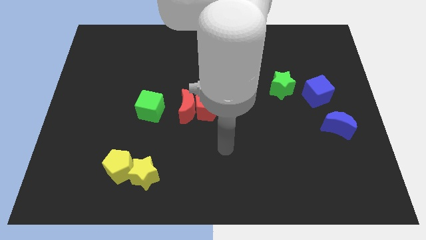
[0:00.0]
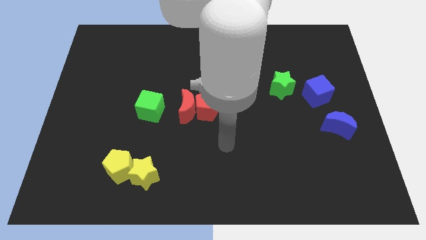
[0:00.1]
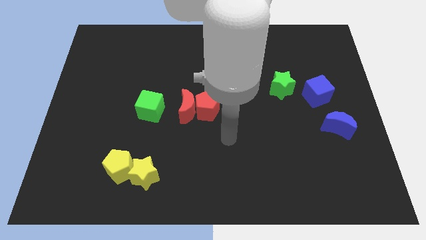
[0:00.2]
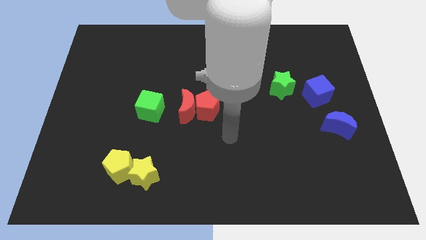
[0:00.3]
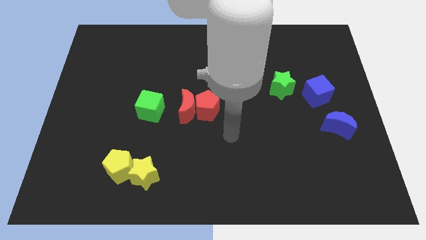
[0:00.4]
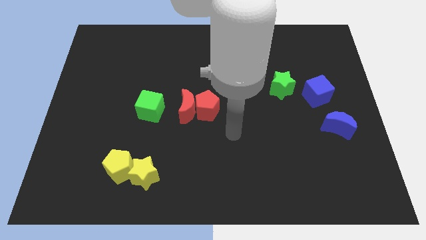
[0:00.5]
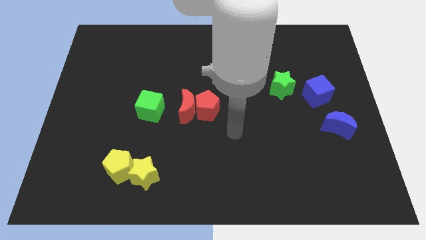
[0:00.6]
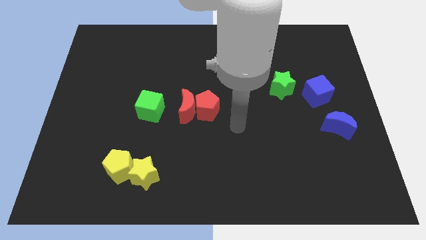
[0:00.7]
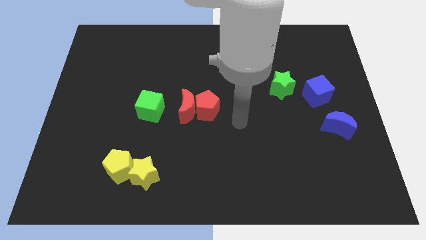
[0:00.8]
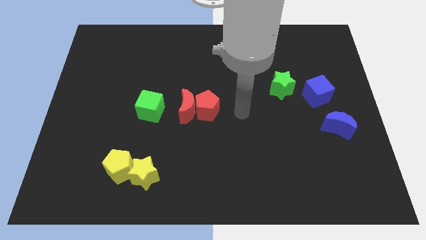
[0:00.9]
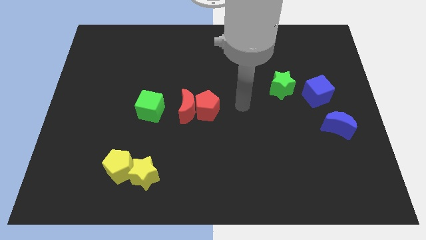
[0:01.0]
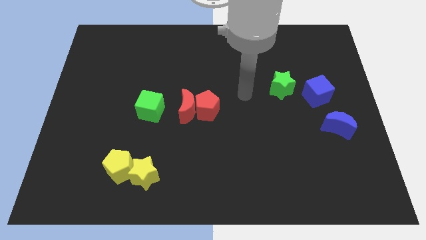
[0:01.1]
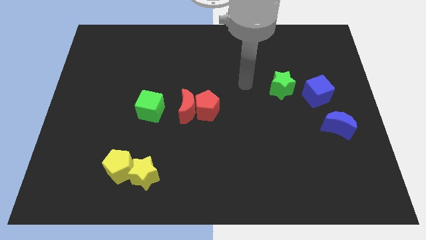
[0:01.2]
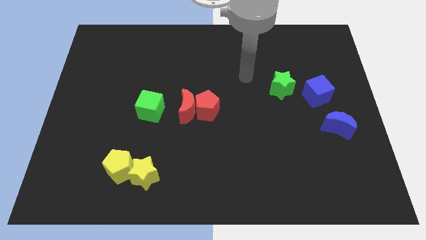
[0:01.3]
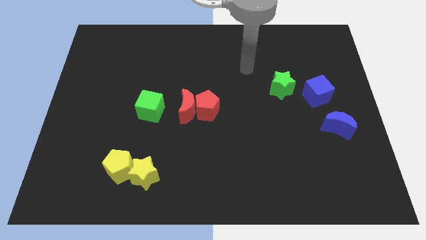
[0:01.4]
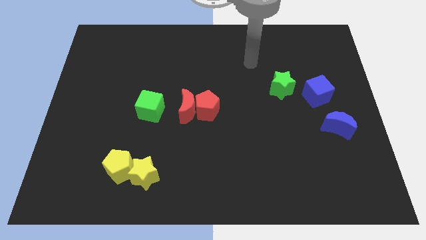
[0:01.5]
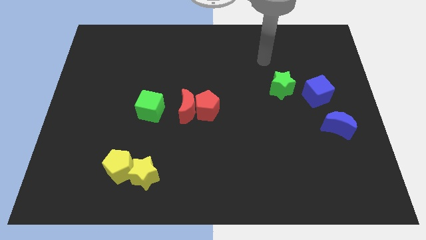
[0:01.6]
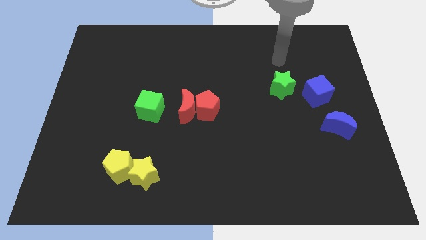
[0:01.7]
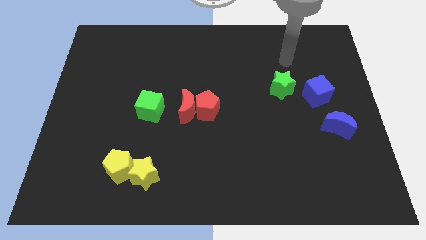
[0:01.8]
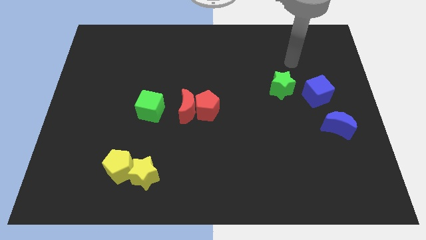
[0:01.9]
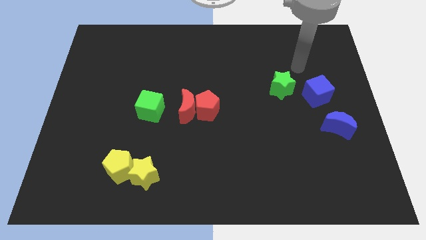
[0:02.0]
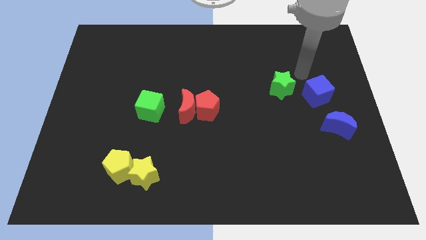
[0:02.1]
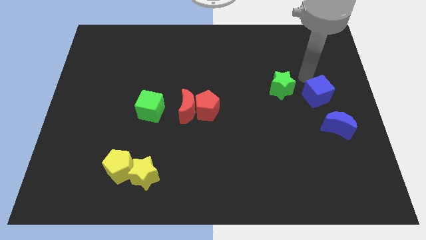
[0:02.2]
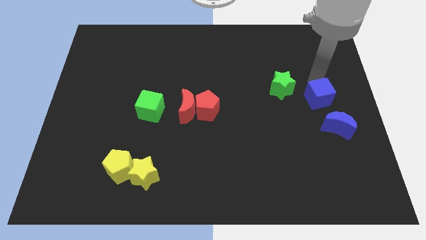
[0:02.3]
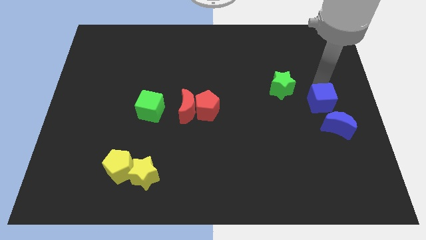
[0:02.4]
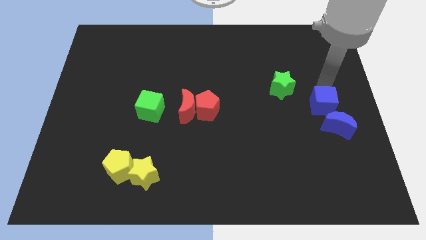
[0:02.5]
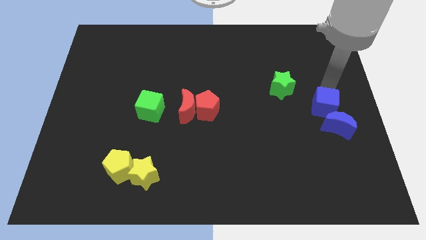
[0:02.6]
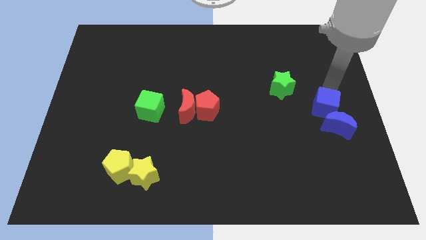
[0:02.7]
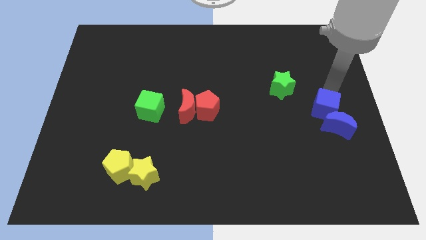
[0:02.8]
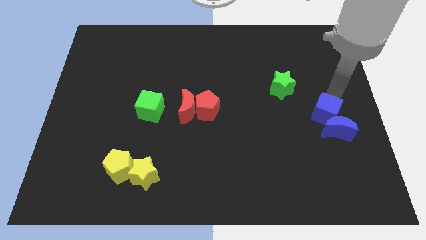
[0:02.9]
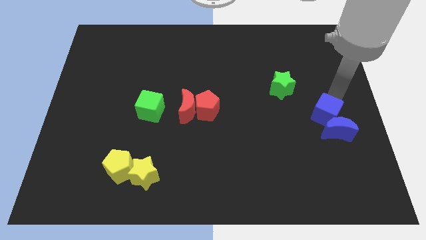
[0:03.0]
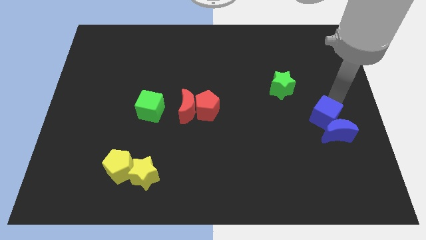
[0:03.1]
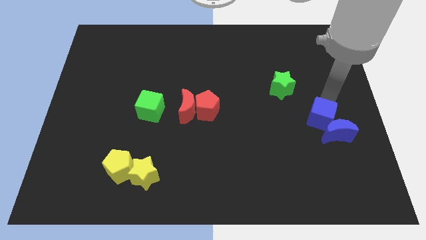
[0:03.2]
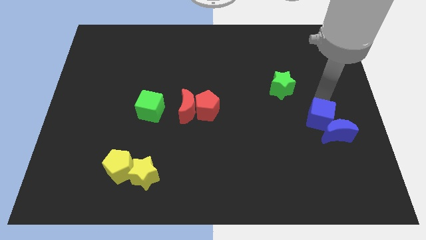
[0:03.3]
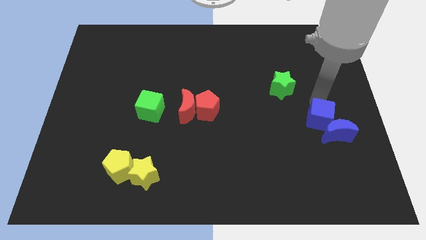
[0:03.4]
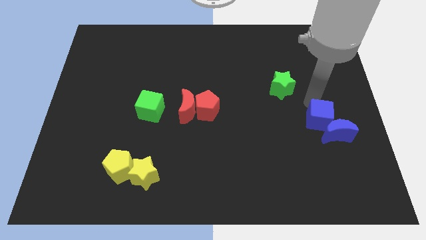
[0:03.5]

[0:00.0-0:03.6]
push the blue cube into blue moon

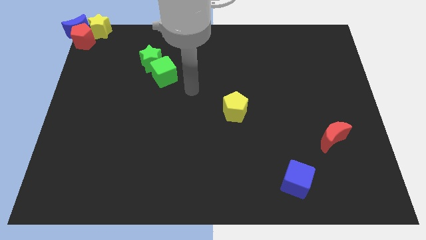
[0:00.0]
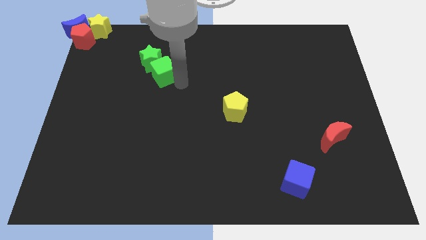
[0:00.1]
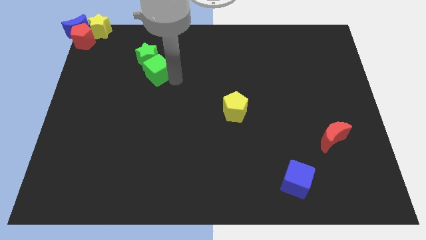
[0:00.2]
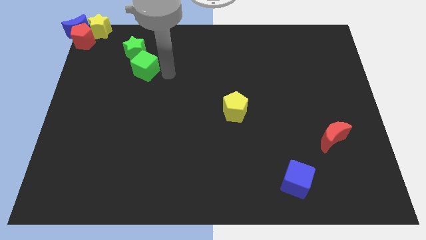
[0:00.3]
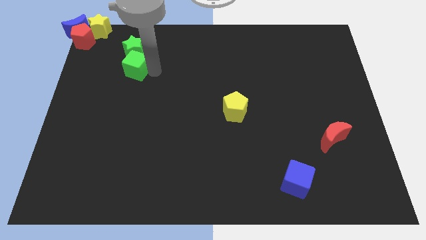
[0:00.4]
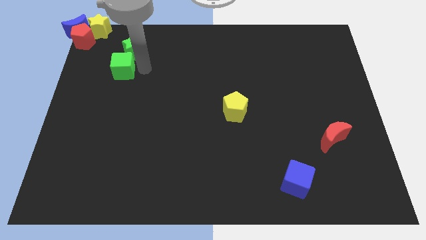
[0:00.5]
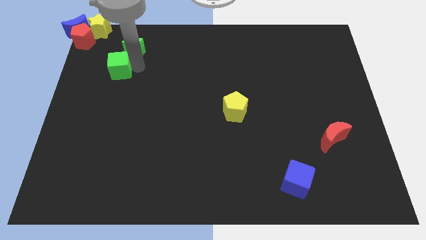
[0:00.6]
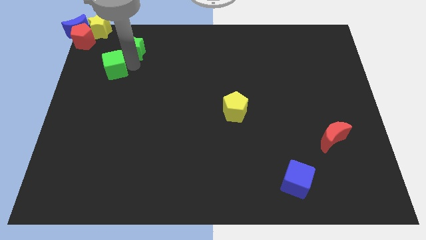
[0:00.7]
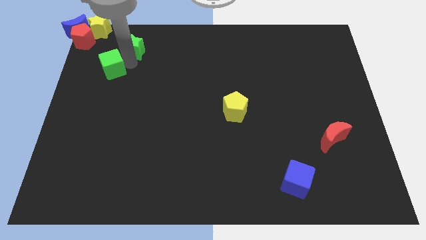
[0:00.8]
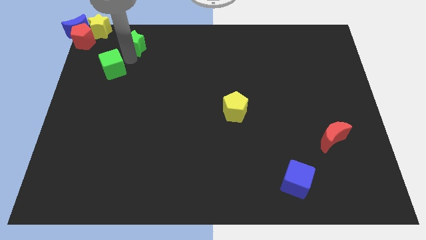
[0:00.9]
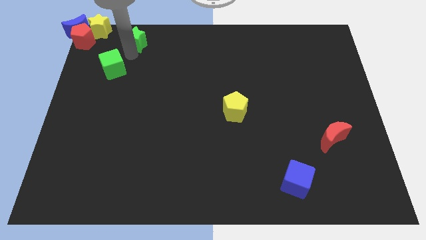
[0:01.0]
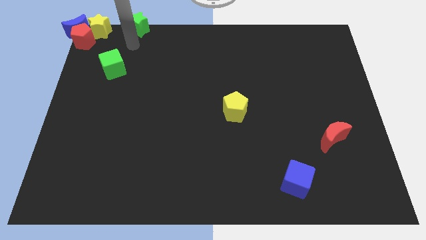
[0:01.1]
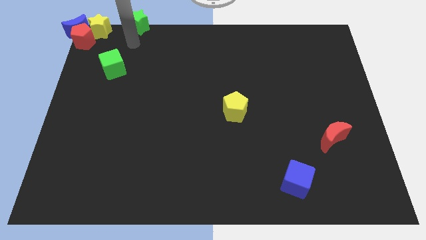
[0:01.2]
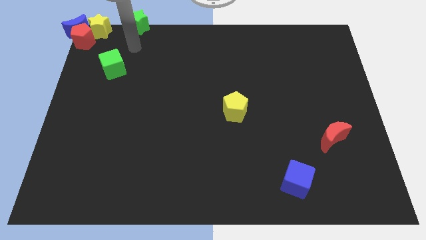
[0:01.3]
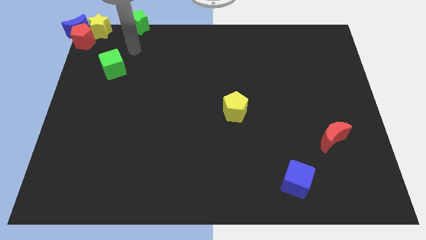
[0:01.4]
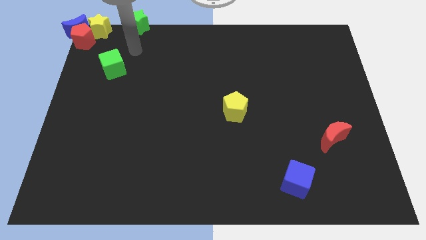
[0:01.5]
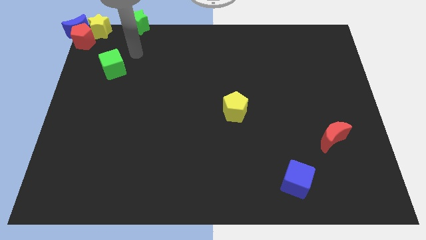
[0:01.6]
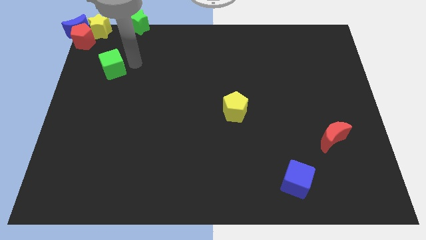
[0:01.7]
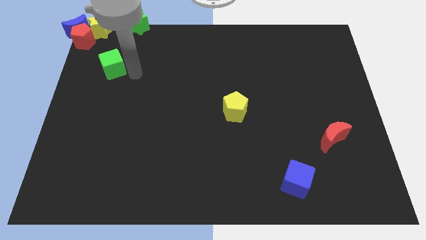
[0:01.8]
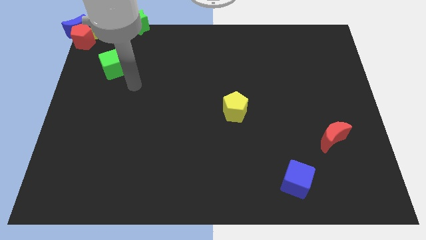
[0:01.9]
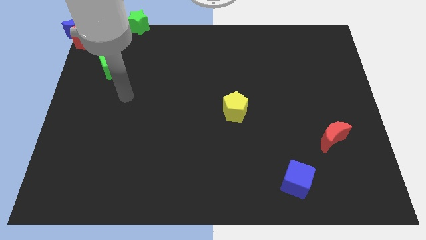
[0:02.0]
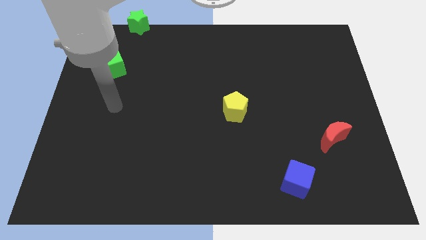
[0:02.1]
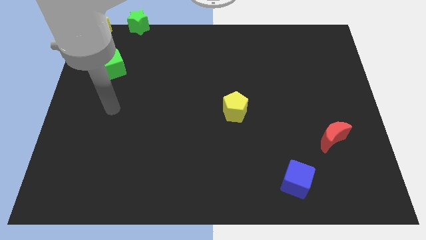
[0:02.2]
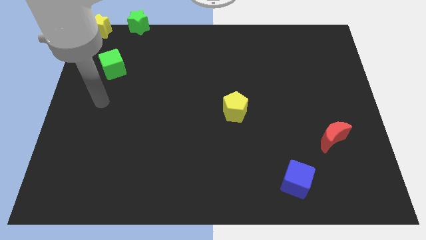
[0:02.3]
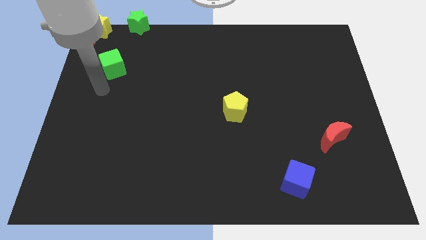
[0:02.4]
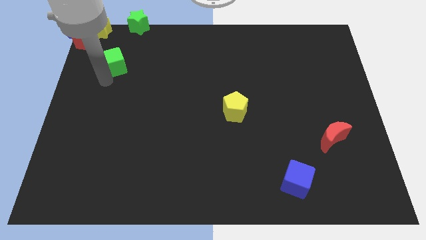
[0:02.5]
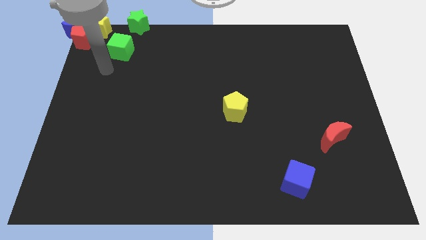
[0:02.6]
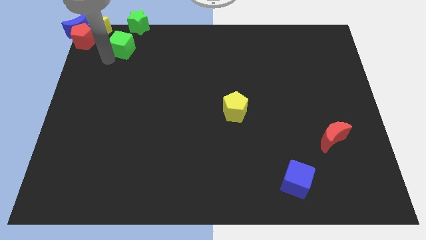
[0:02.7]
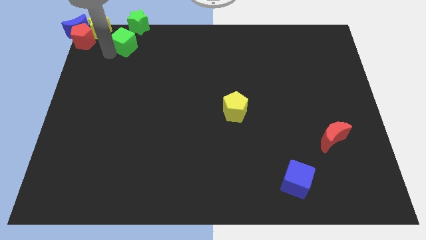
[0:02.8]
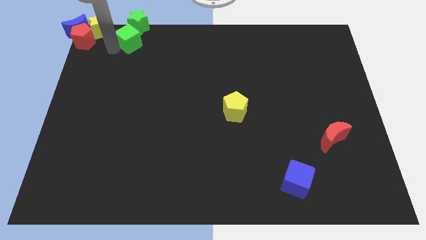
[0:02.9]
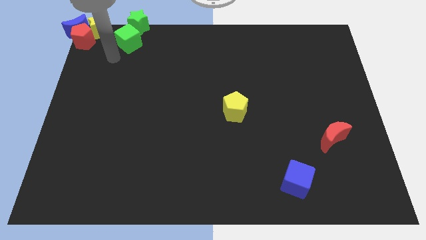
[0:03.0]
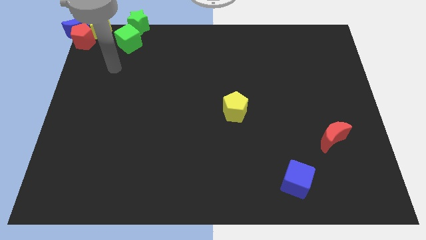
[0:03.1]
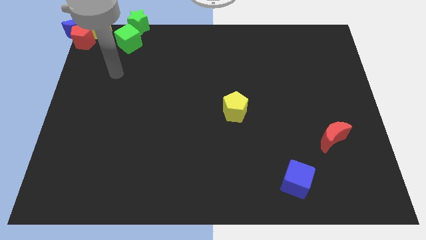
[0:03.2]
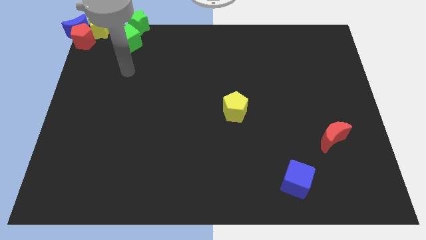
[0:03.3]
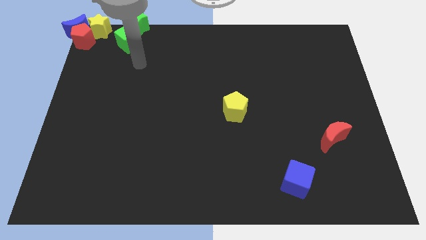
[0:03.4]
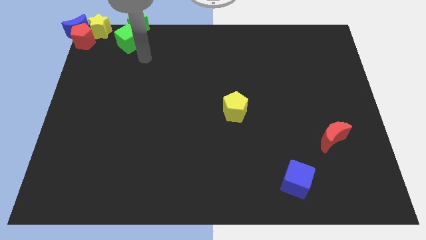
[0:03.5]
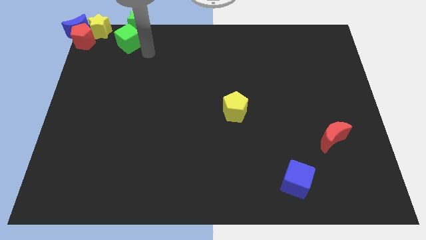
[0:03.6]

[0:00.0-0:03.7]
push the green blocks towards the top side of the board

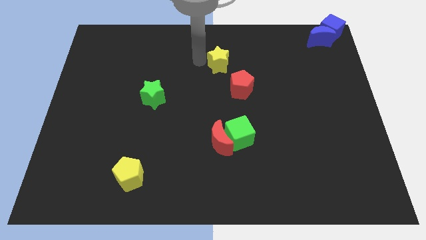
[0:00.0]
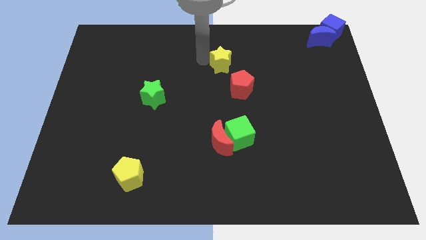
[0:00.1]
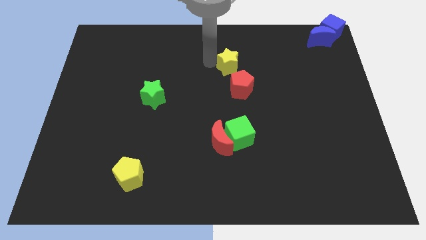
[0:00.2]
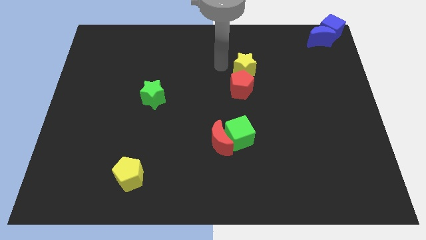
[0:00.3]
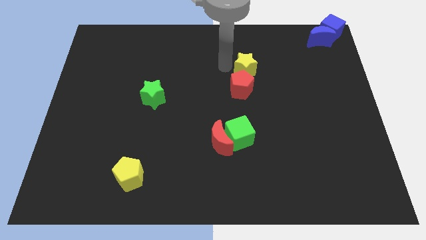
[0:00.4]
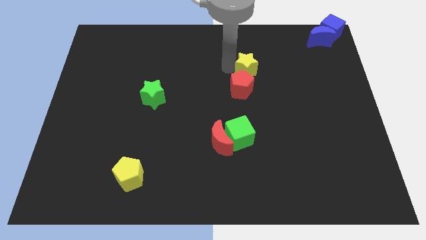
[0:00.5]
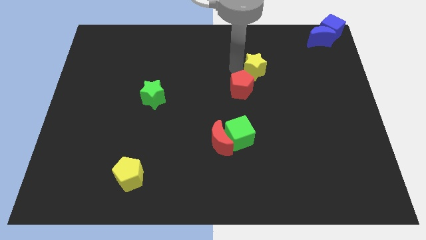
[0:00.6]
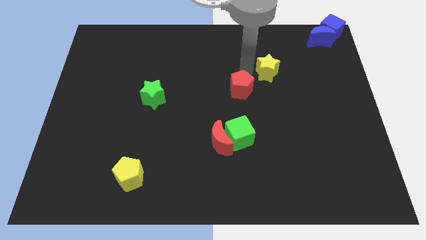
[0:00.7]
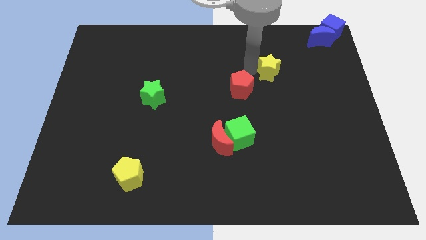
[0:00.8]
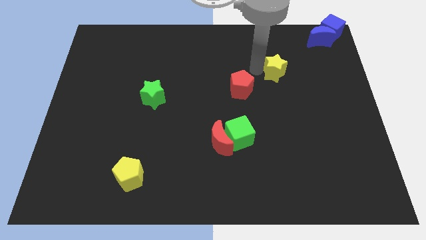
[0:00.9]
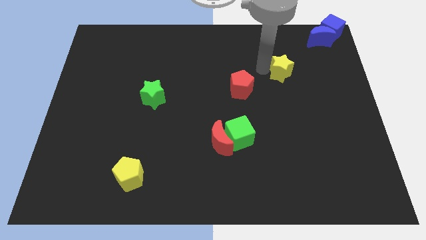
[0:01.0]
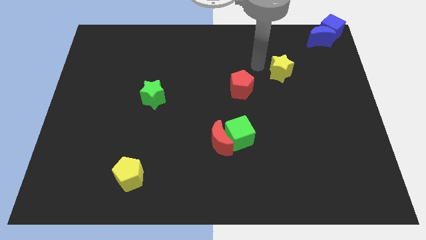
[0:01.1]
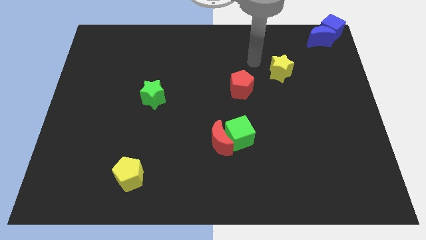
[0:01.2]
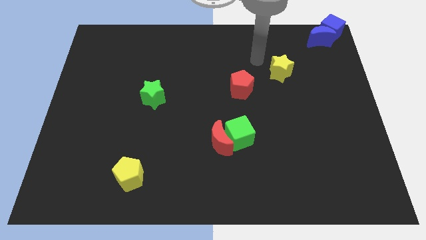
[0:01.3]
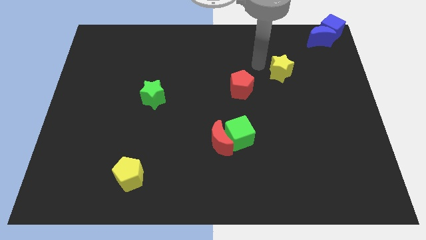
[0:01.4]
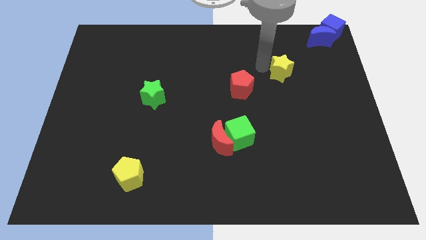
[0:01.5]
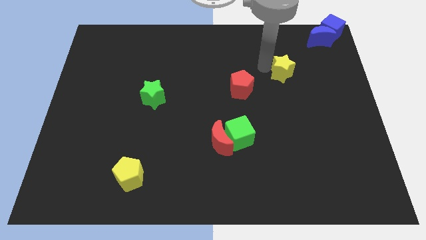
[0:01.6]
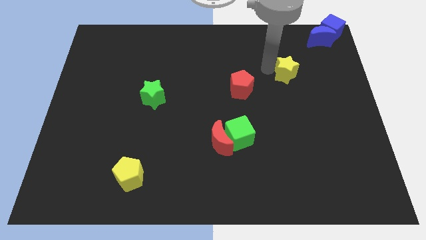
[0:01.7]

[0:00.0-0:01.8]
push the yellow star diagonally top right to the red pentagon
